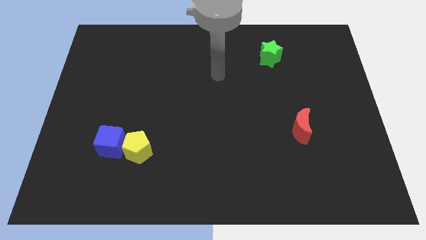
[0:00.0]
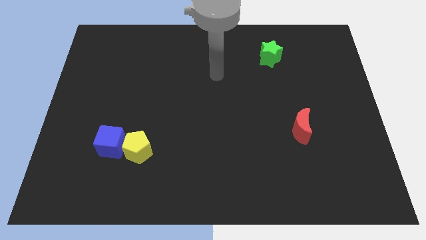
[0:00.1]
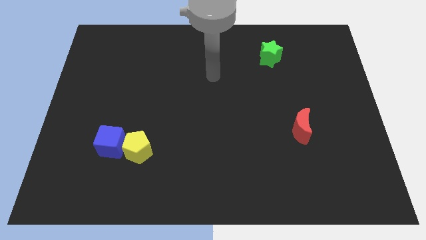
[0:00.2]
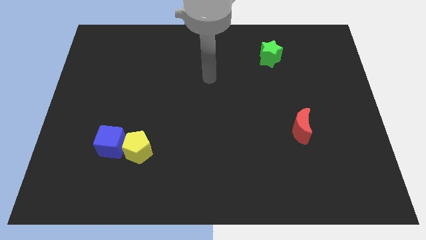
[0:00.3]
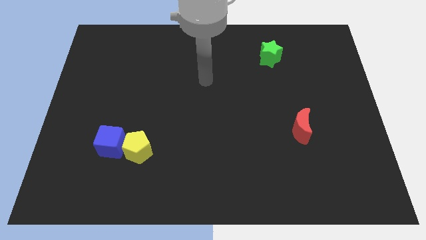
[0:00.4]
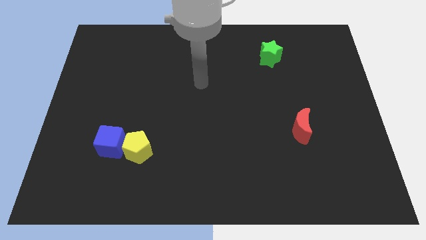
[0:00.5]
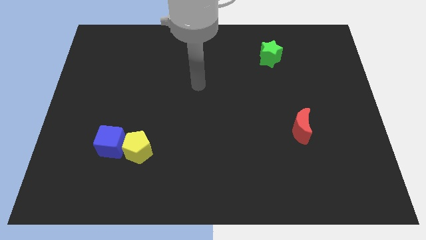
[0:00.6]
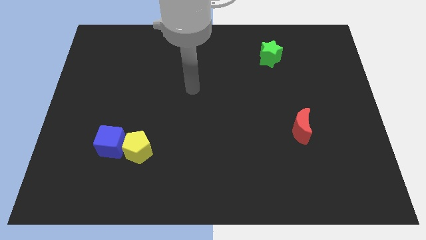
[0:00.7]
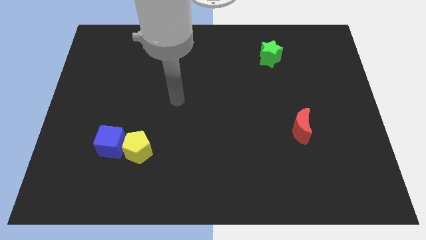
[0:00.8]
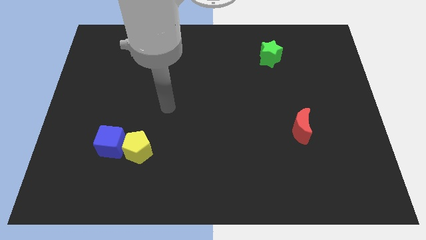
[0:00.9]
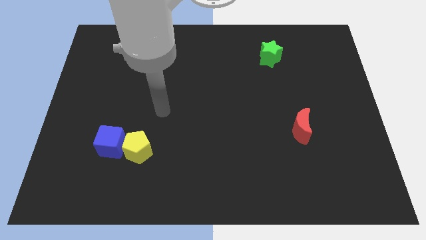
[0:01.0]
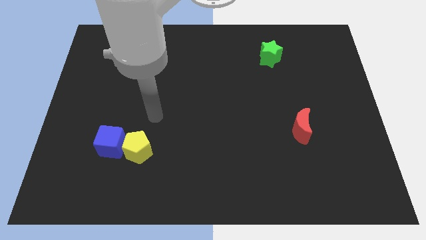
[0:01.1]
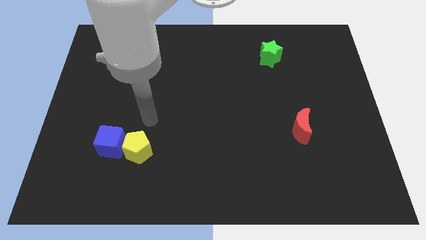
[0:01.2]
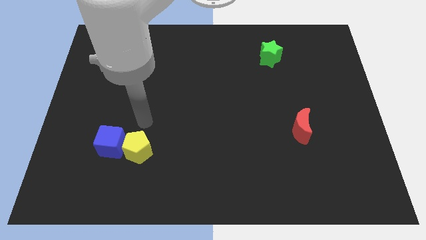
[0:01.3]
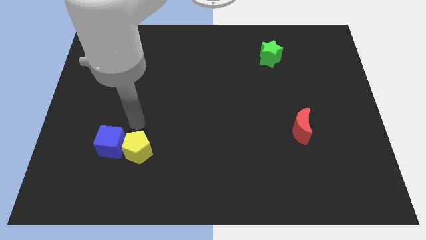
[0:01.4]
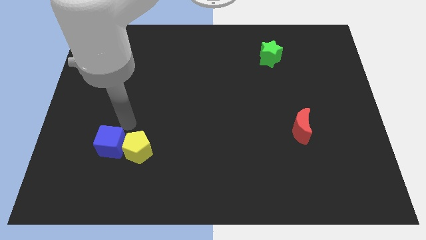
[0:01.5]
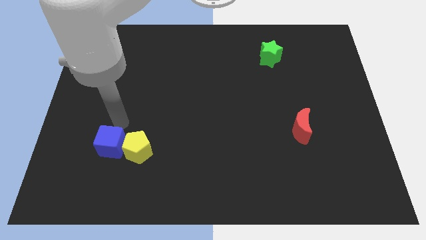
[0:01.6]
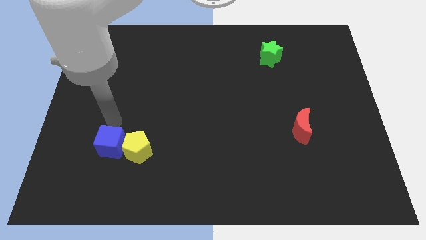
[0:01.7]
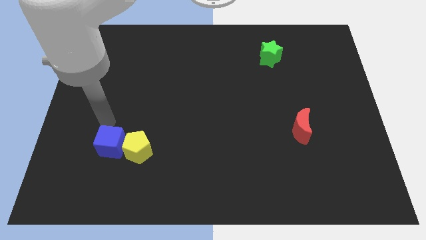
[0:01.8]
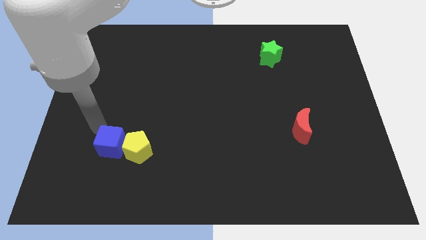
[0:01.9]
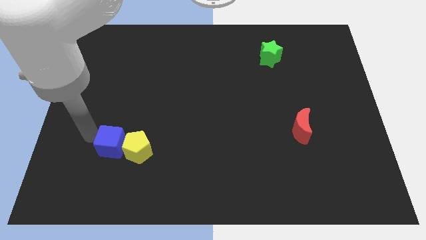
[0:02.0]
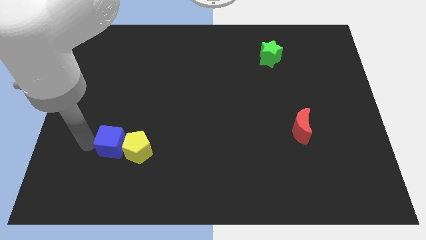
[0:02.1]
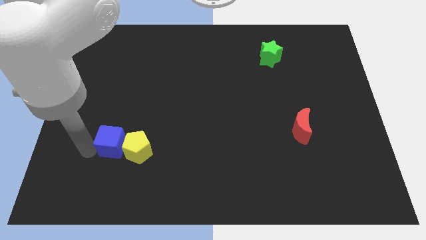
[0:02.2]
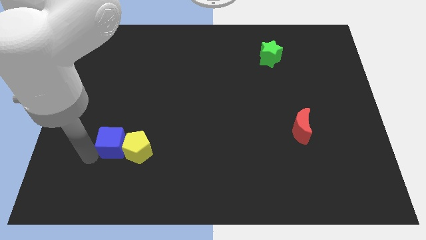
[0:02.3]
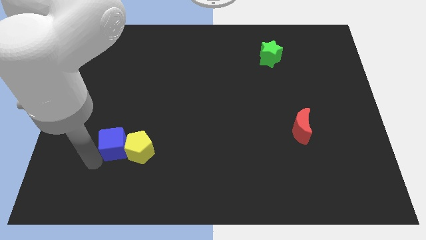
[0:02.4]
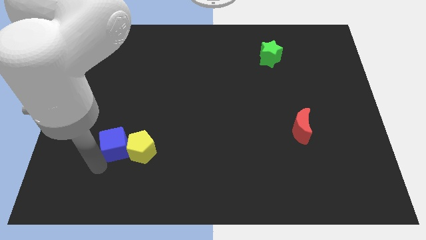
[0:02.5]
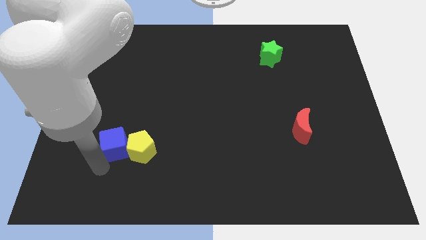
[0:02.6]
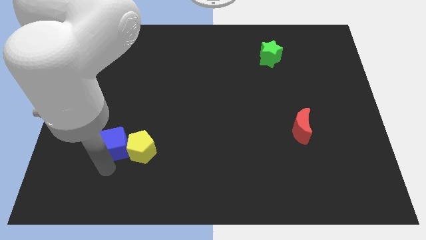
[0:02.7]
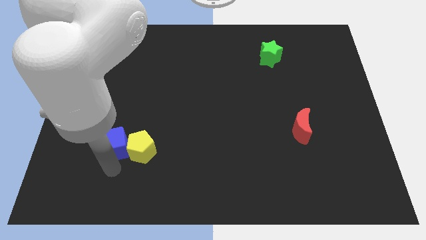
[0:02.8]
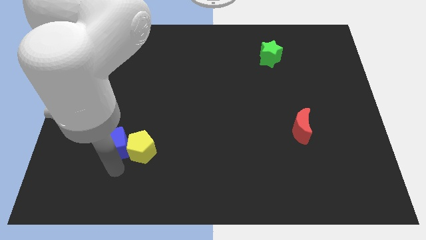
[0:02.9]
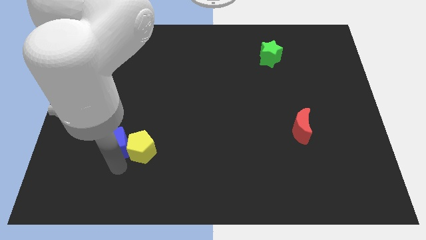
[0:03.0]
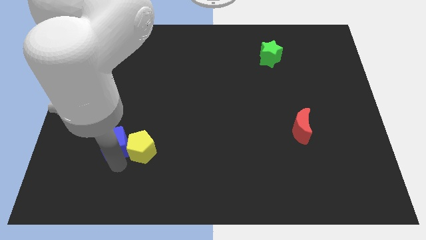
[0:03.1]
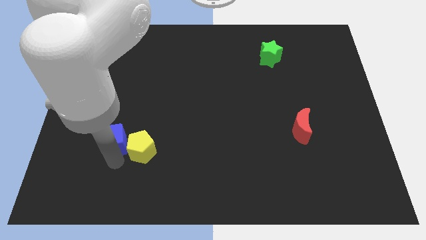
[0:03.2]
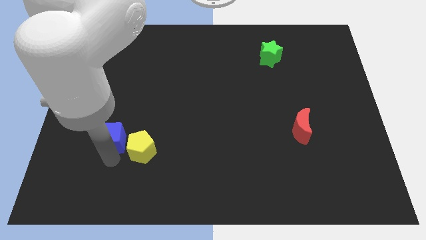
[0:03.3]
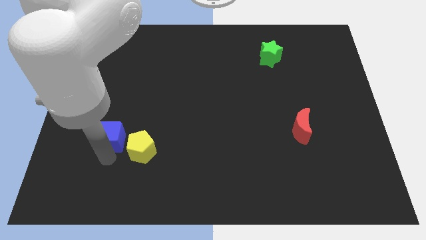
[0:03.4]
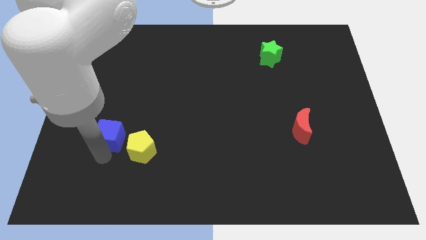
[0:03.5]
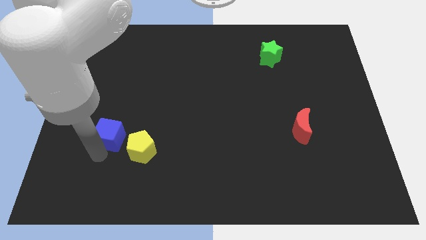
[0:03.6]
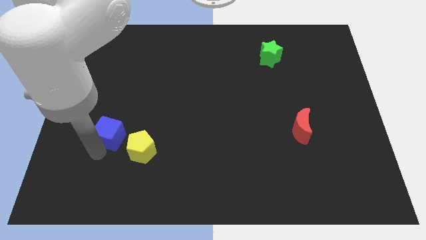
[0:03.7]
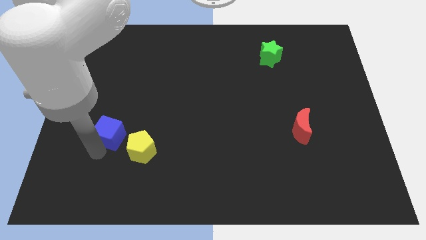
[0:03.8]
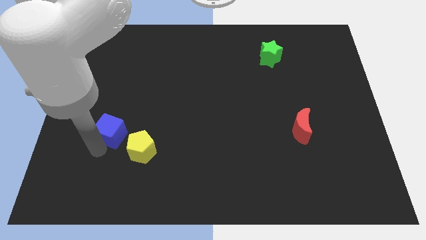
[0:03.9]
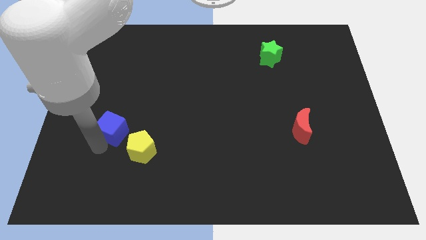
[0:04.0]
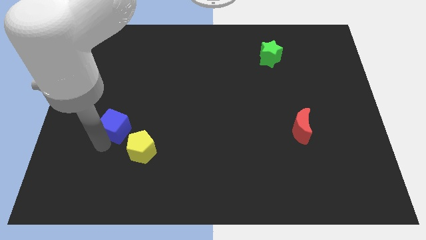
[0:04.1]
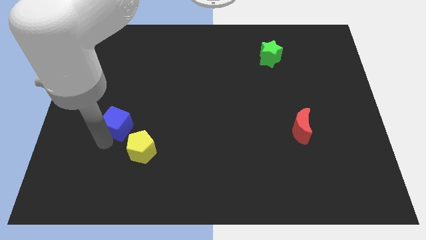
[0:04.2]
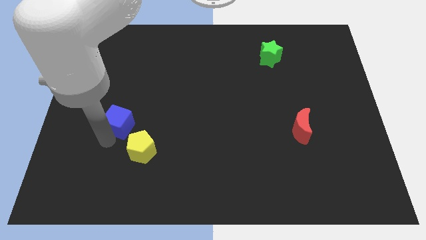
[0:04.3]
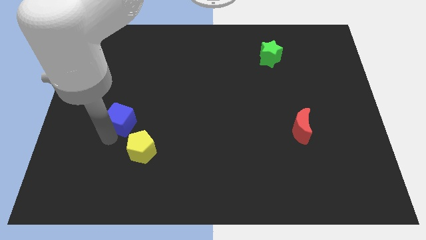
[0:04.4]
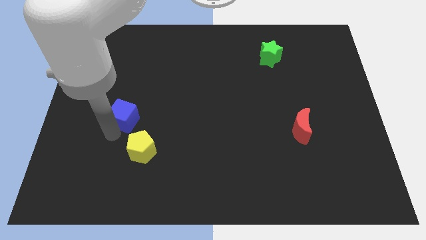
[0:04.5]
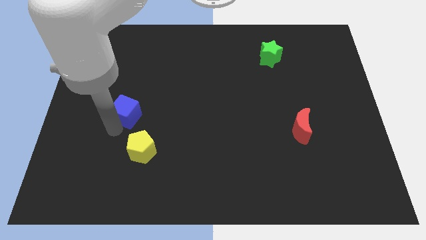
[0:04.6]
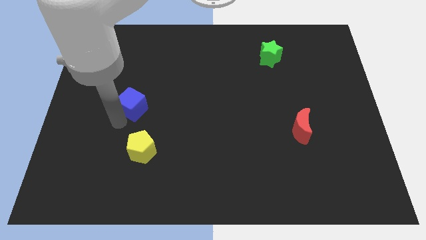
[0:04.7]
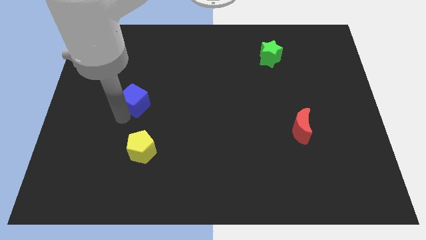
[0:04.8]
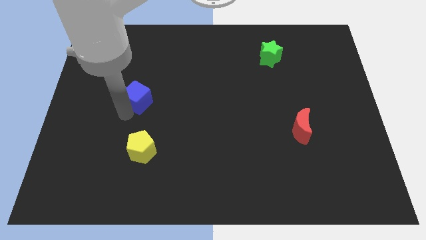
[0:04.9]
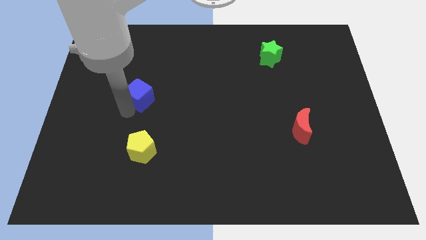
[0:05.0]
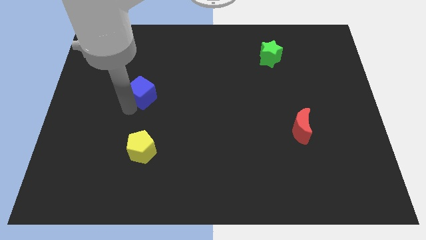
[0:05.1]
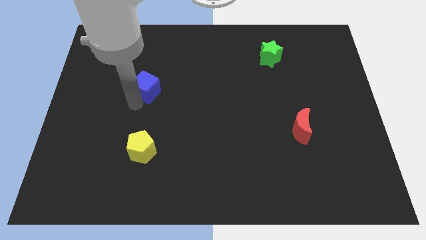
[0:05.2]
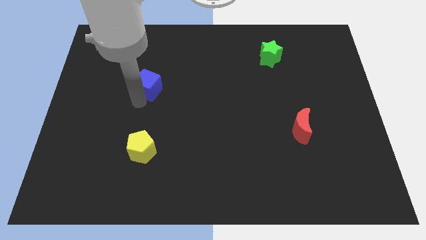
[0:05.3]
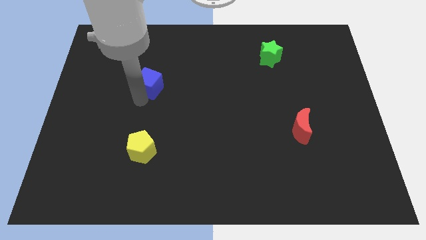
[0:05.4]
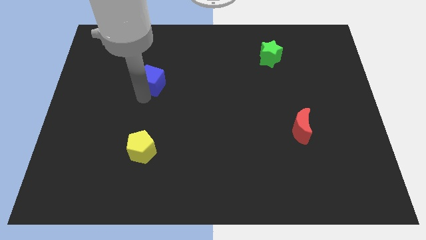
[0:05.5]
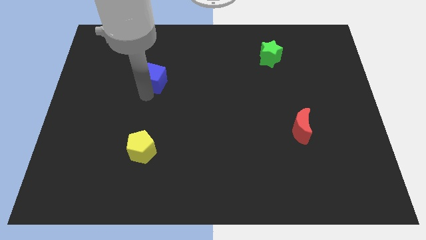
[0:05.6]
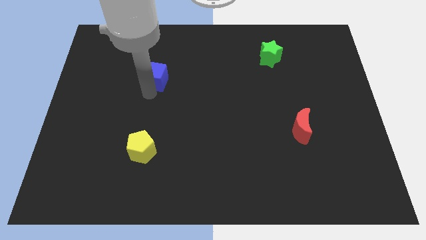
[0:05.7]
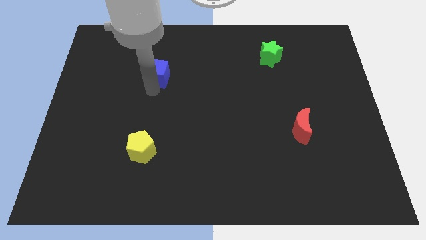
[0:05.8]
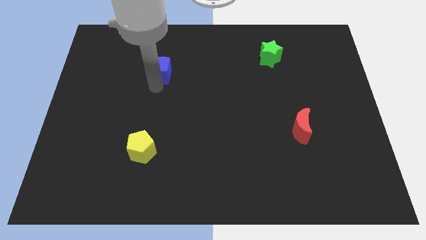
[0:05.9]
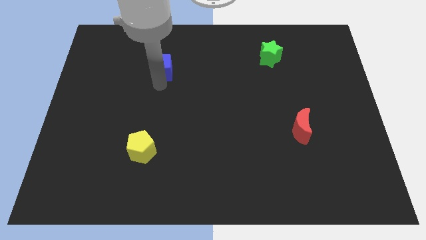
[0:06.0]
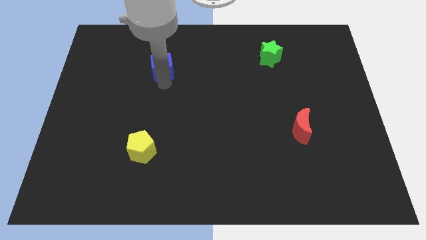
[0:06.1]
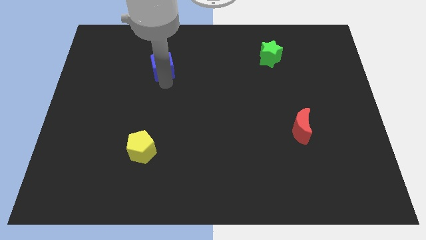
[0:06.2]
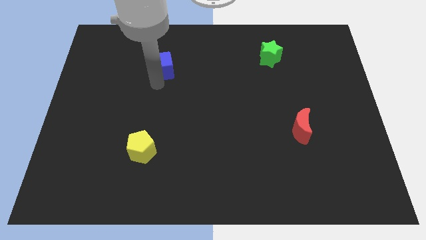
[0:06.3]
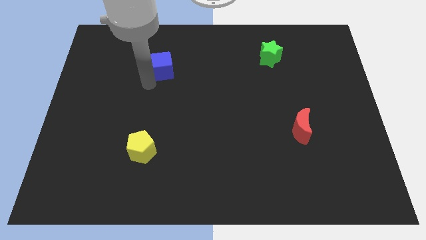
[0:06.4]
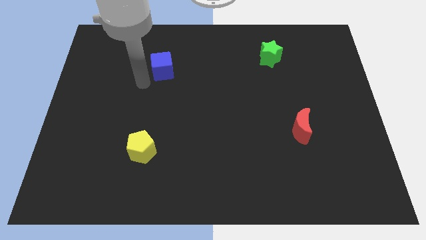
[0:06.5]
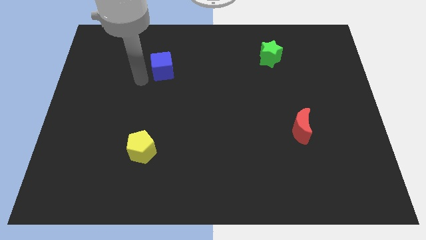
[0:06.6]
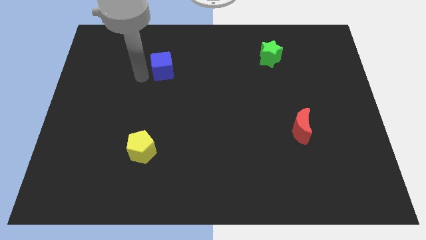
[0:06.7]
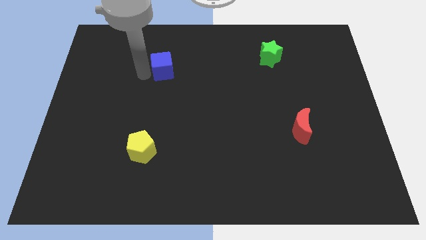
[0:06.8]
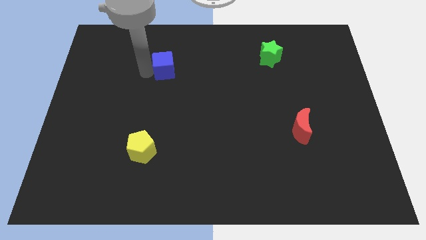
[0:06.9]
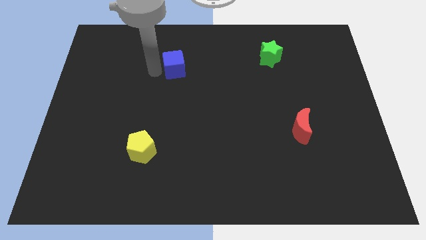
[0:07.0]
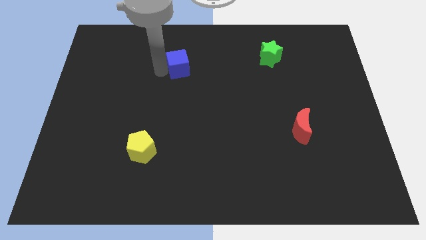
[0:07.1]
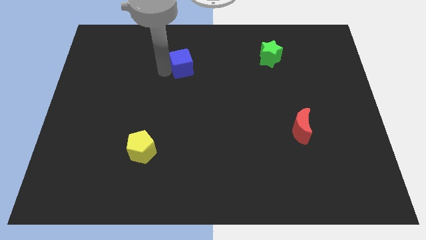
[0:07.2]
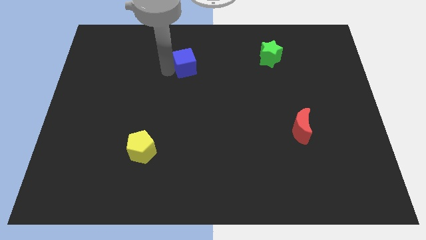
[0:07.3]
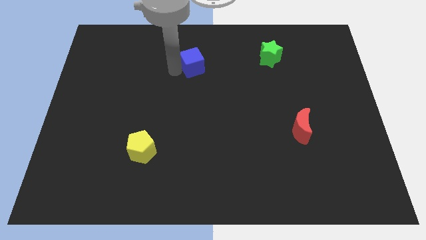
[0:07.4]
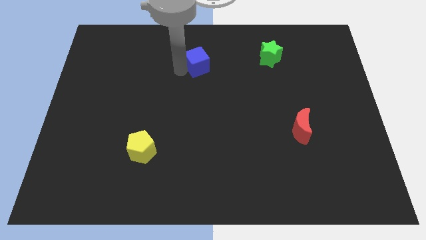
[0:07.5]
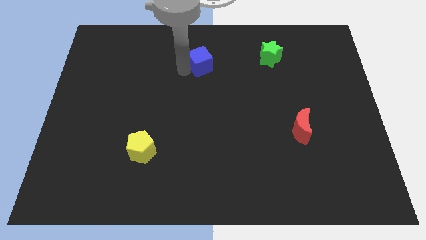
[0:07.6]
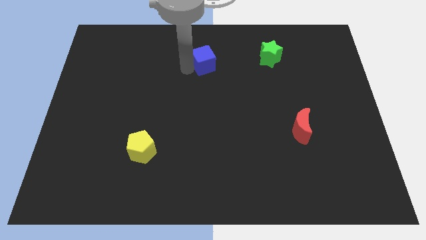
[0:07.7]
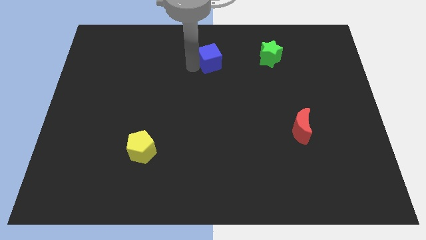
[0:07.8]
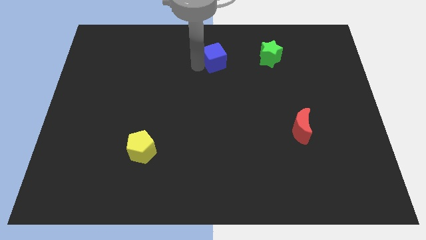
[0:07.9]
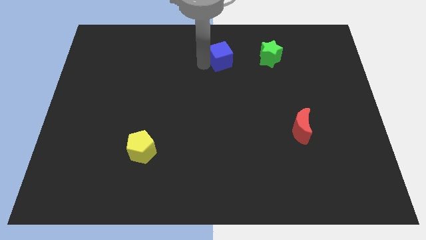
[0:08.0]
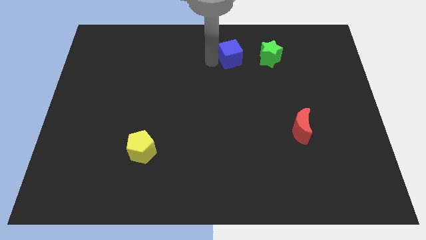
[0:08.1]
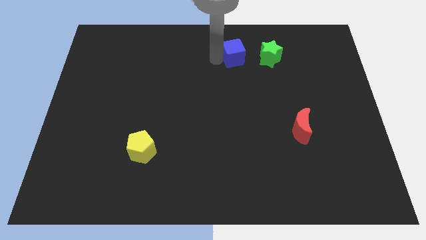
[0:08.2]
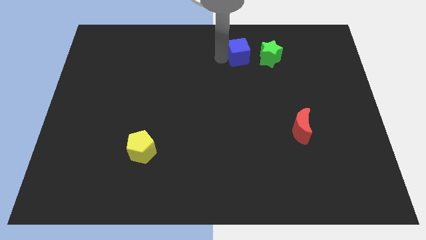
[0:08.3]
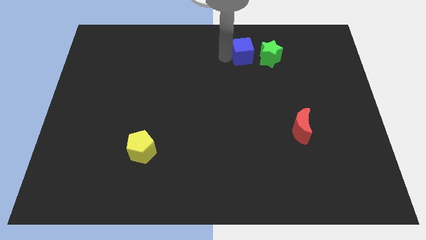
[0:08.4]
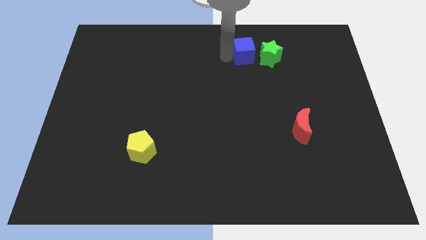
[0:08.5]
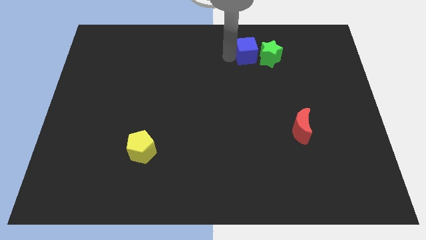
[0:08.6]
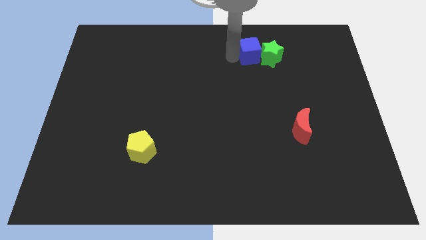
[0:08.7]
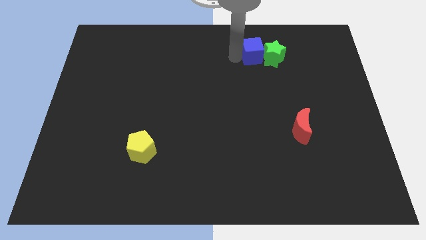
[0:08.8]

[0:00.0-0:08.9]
put the blue cube close to the star
